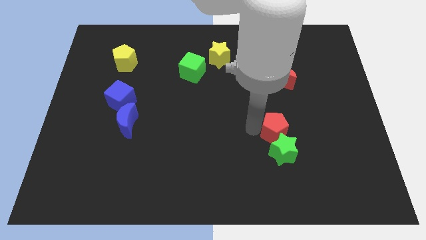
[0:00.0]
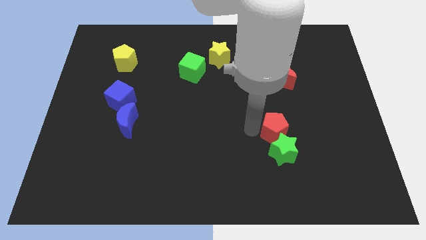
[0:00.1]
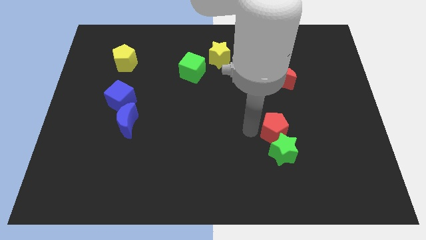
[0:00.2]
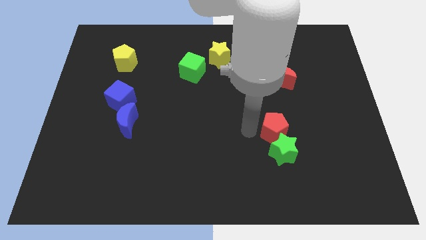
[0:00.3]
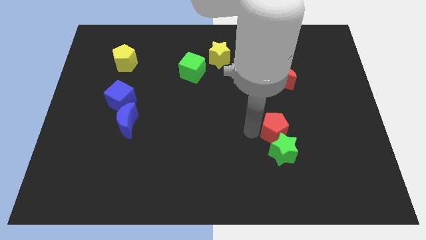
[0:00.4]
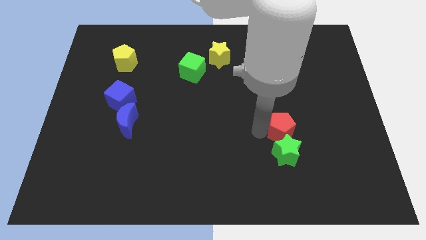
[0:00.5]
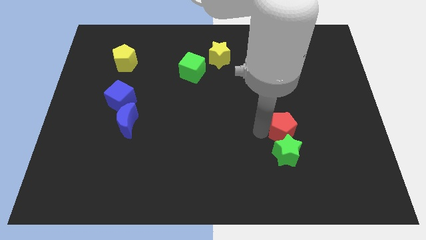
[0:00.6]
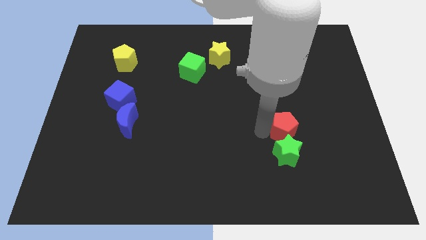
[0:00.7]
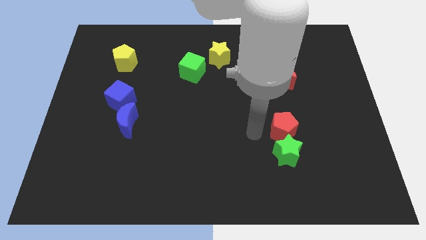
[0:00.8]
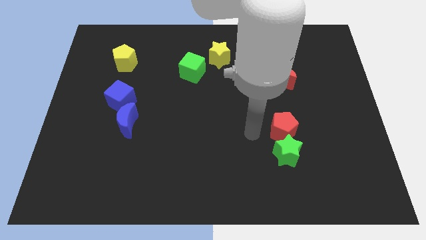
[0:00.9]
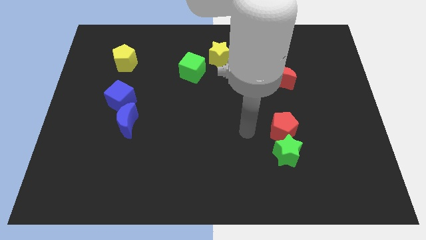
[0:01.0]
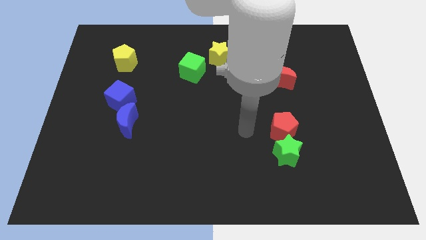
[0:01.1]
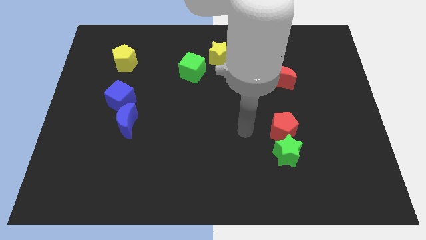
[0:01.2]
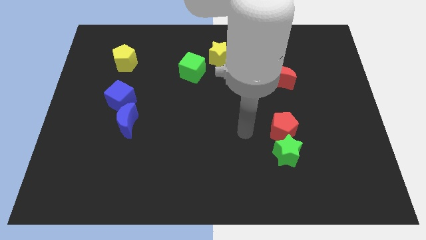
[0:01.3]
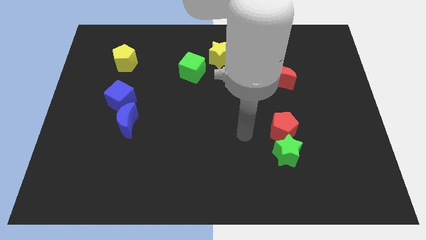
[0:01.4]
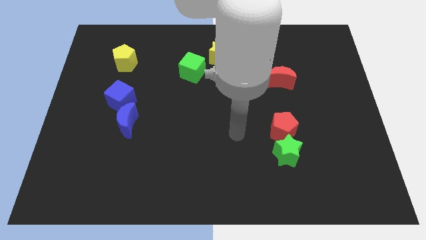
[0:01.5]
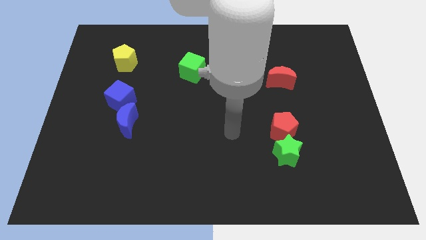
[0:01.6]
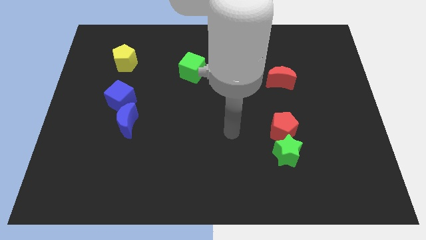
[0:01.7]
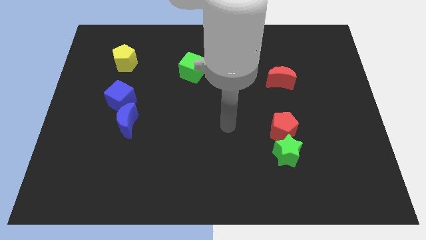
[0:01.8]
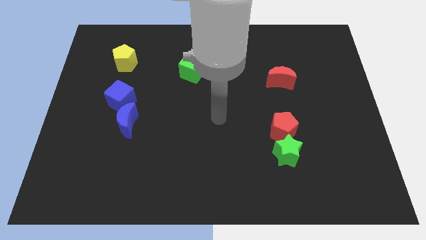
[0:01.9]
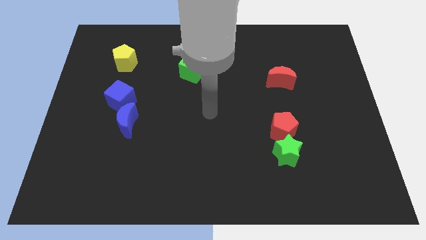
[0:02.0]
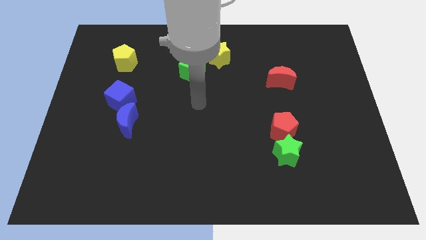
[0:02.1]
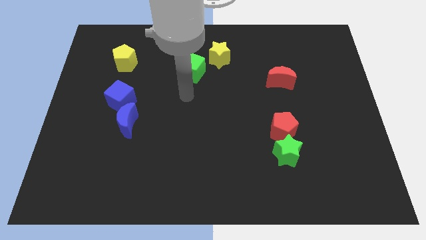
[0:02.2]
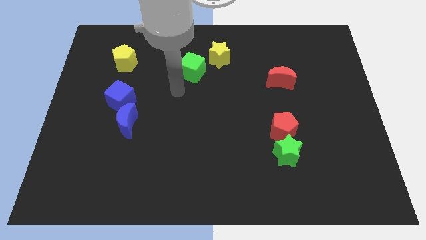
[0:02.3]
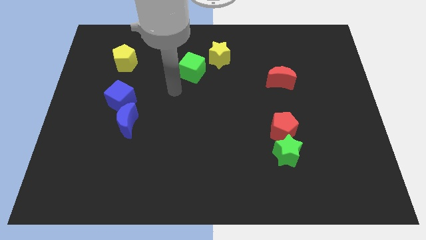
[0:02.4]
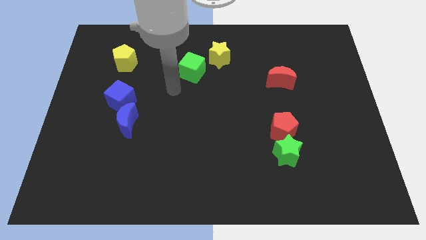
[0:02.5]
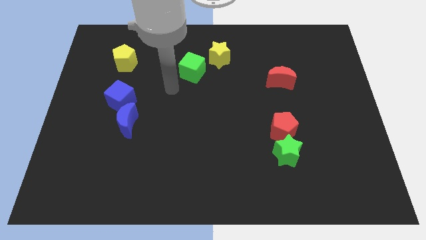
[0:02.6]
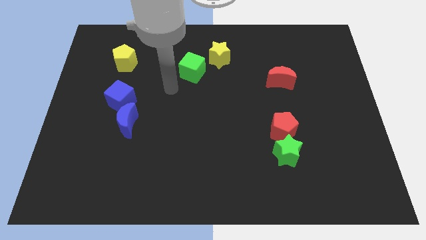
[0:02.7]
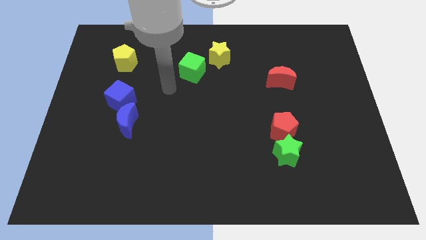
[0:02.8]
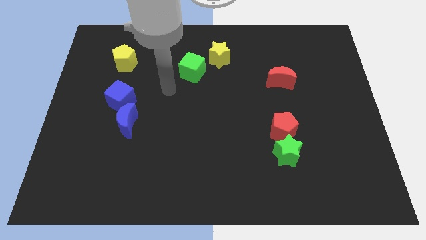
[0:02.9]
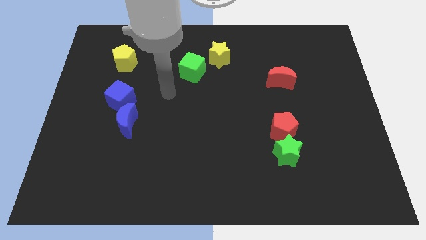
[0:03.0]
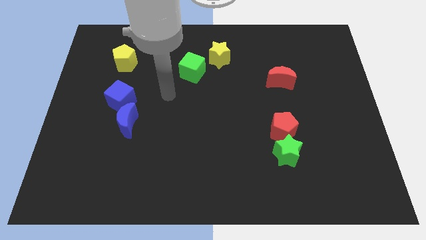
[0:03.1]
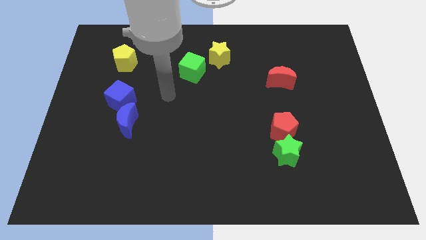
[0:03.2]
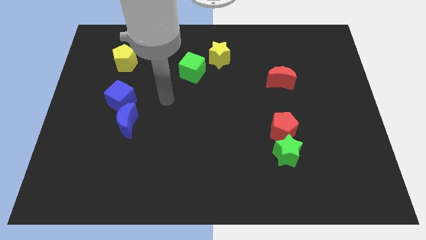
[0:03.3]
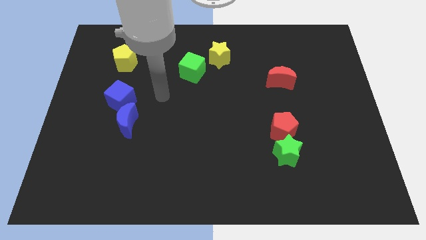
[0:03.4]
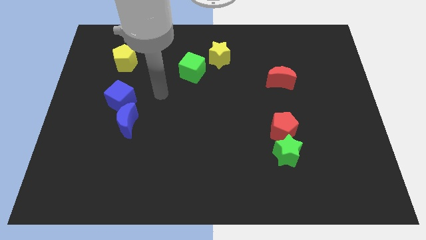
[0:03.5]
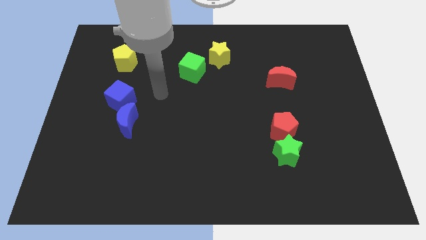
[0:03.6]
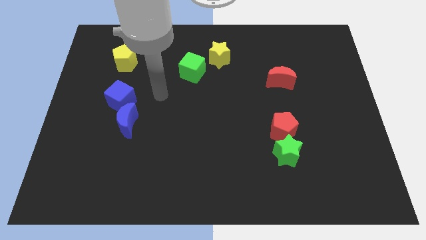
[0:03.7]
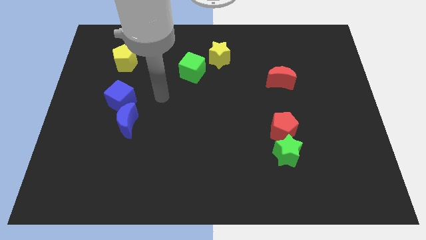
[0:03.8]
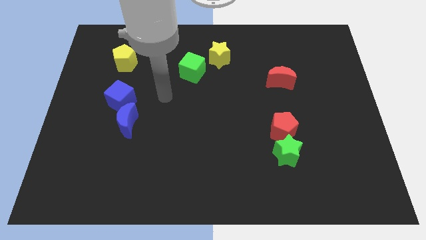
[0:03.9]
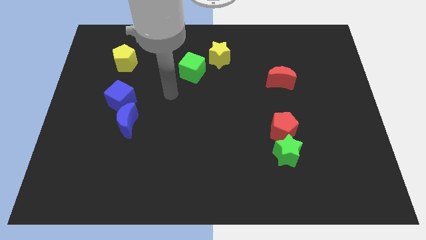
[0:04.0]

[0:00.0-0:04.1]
move your arm towards the green cube

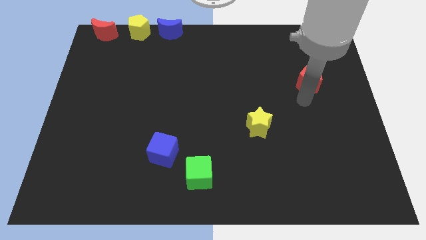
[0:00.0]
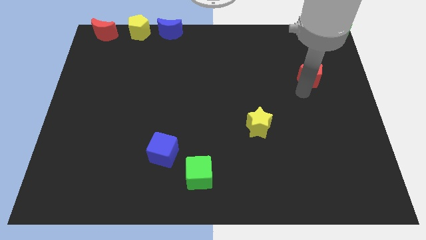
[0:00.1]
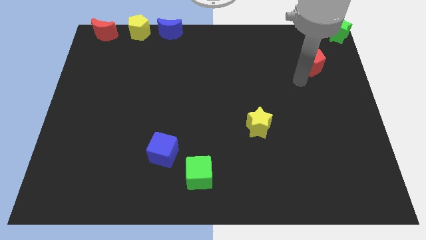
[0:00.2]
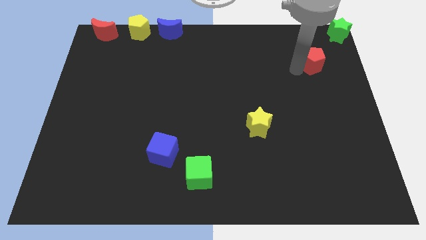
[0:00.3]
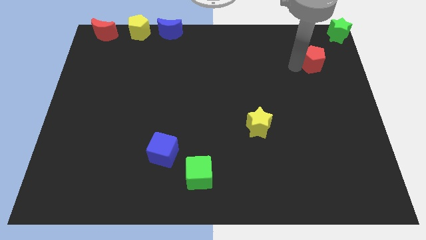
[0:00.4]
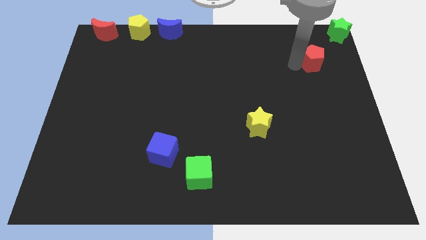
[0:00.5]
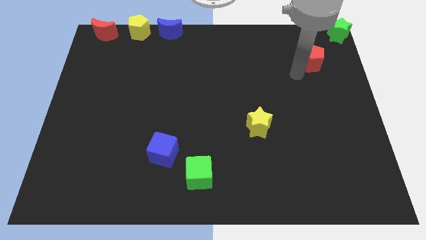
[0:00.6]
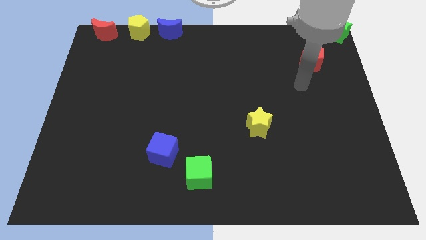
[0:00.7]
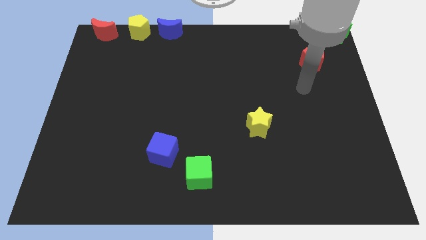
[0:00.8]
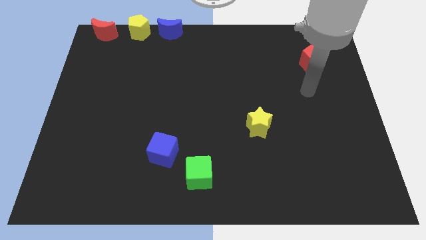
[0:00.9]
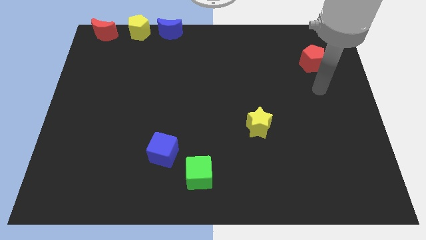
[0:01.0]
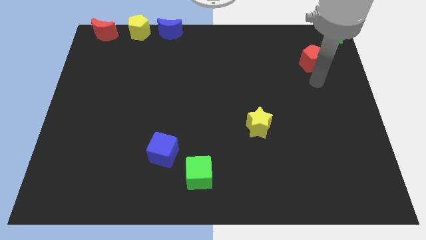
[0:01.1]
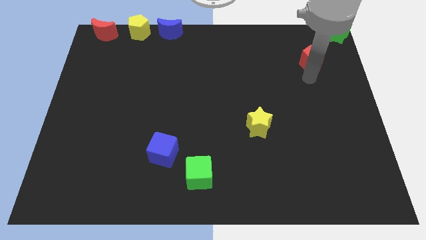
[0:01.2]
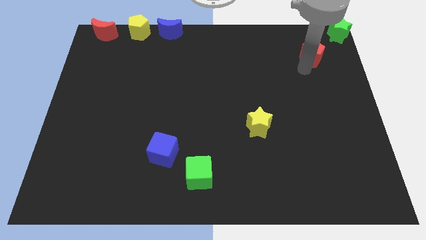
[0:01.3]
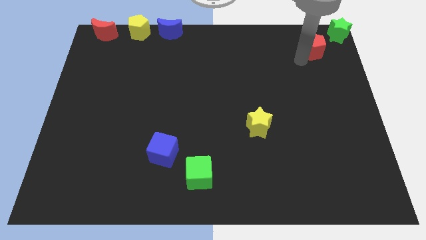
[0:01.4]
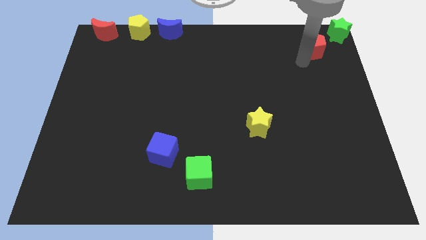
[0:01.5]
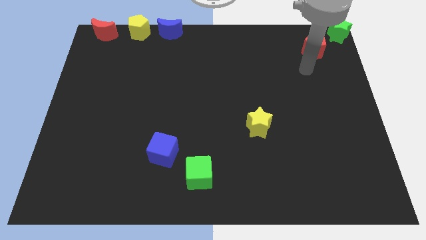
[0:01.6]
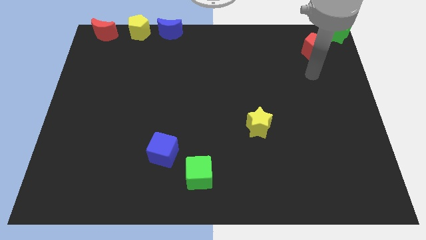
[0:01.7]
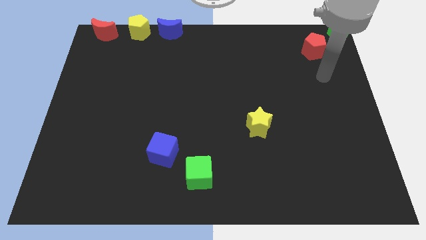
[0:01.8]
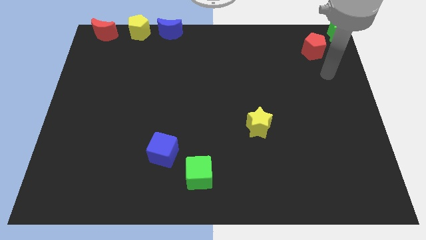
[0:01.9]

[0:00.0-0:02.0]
push the red pentagon towards right green star

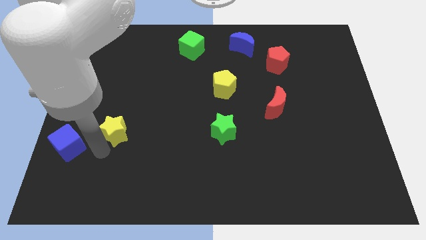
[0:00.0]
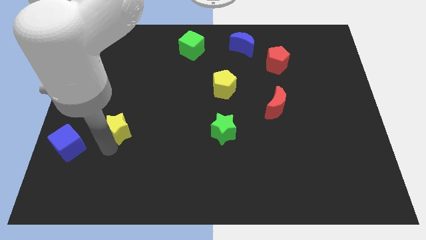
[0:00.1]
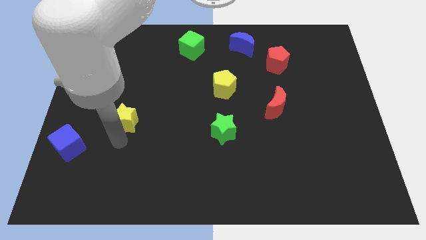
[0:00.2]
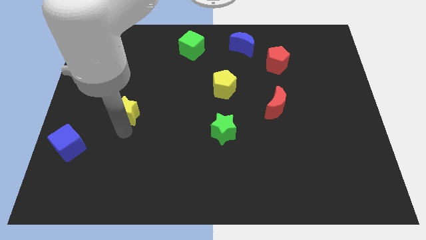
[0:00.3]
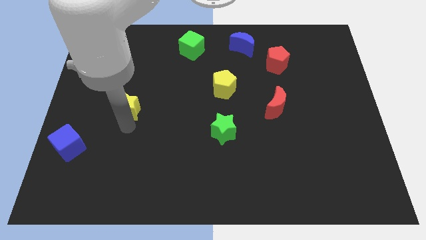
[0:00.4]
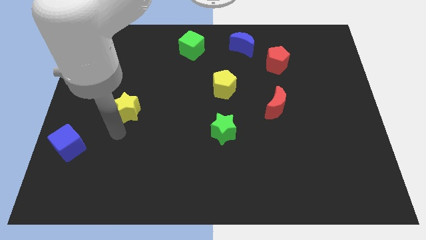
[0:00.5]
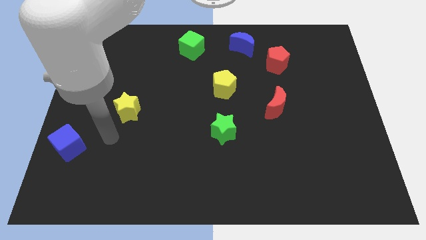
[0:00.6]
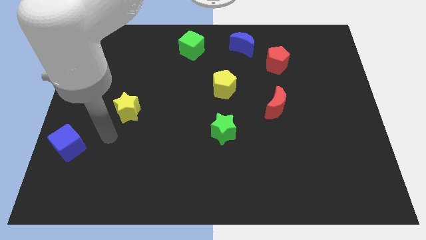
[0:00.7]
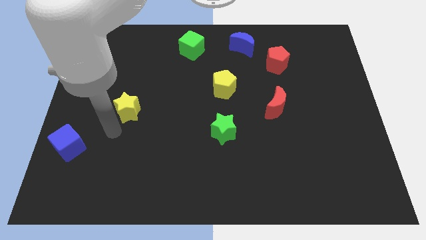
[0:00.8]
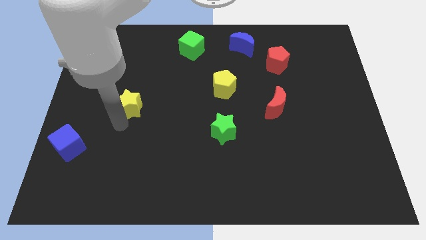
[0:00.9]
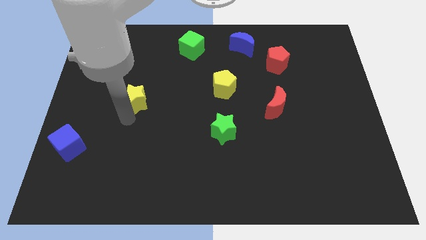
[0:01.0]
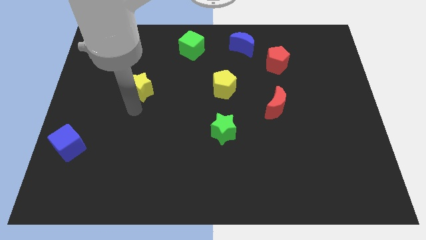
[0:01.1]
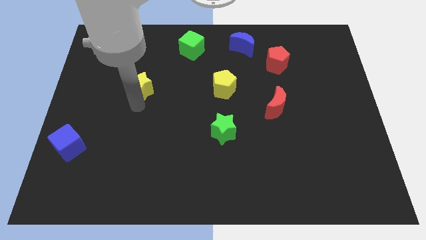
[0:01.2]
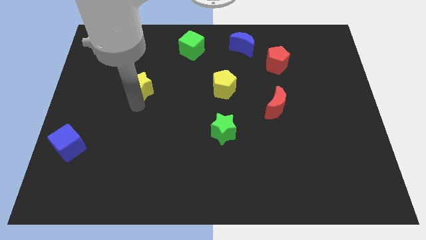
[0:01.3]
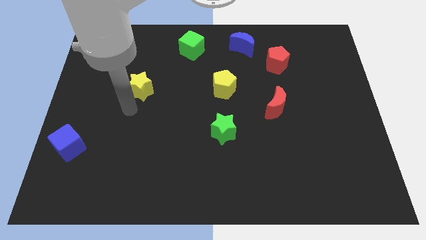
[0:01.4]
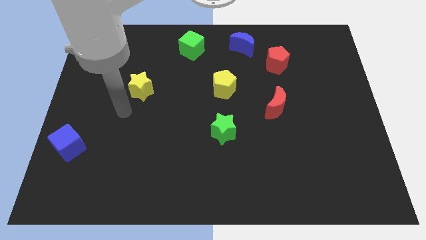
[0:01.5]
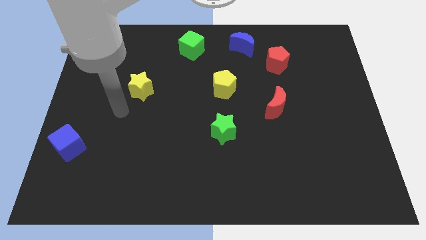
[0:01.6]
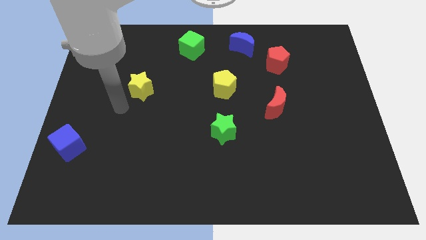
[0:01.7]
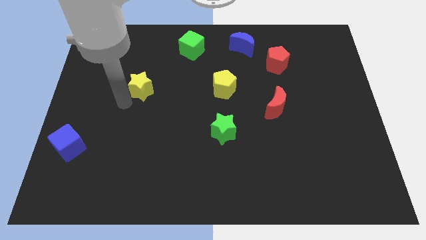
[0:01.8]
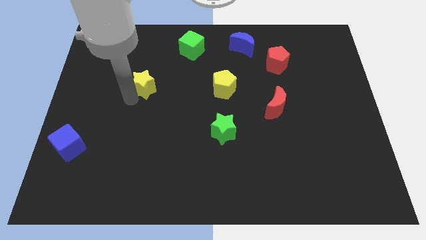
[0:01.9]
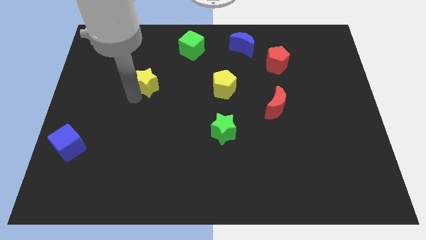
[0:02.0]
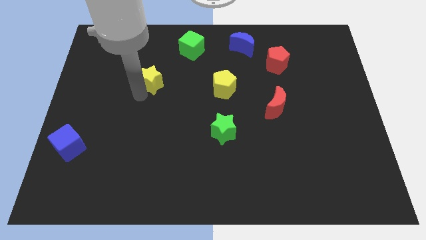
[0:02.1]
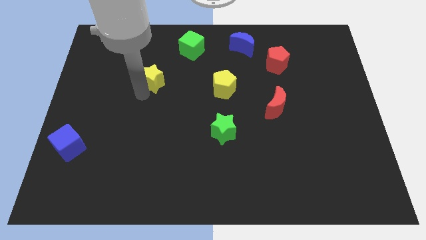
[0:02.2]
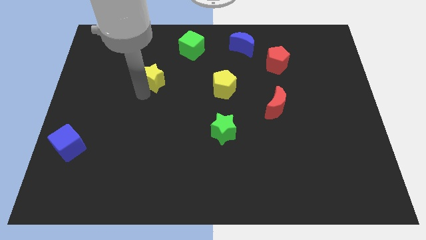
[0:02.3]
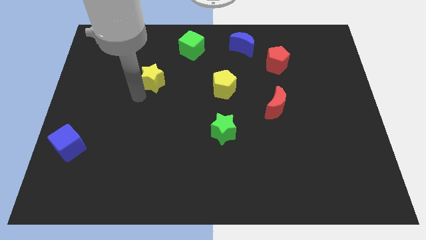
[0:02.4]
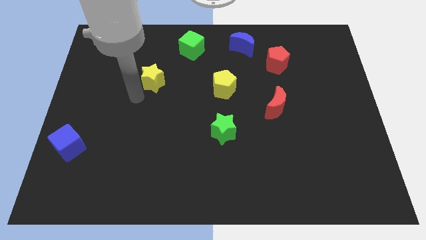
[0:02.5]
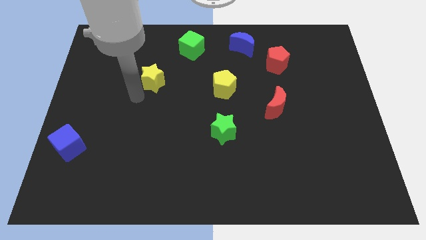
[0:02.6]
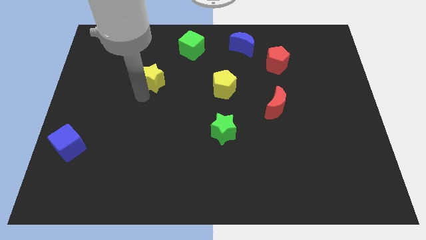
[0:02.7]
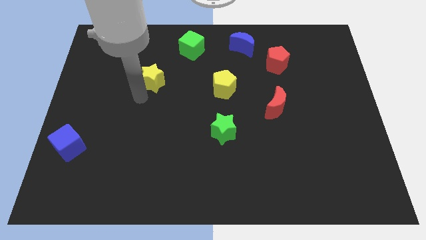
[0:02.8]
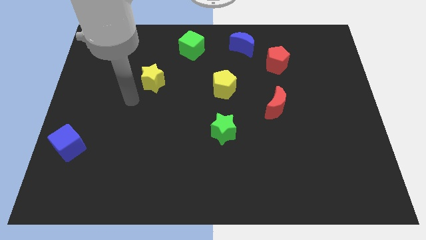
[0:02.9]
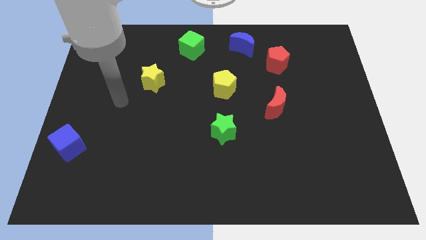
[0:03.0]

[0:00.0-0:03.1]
push the yellow star diagnol to the green cube
